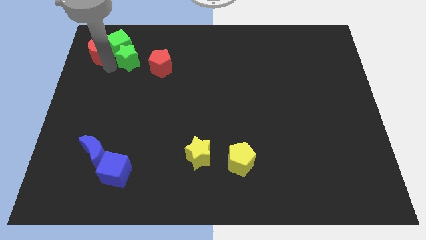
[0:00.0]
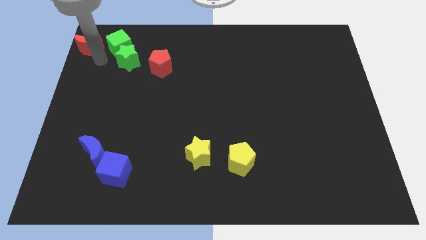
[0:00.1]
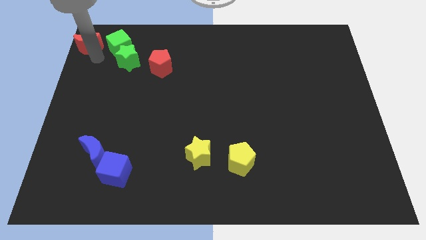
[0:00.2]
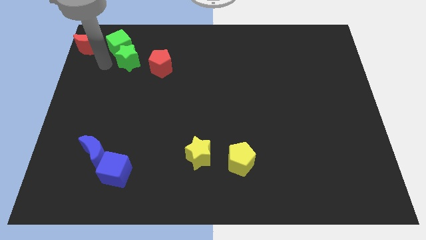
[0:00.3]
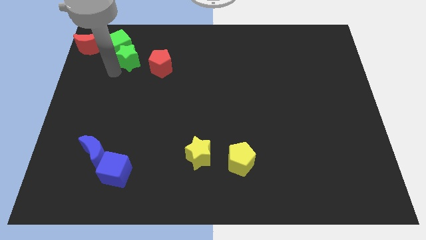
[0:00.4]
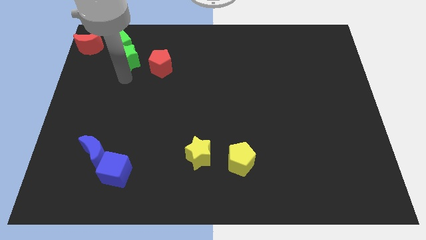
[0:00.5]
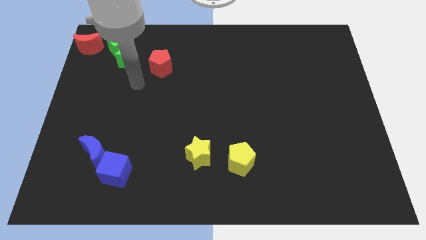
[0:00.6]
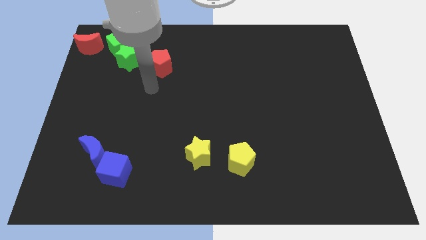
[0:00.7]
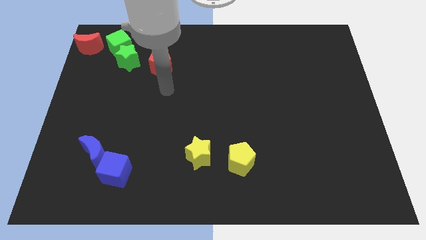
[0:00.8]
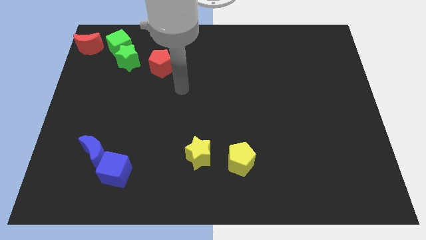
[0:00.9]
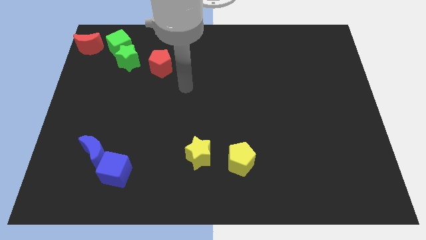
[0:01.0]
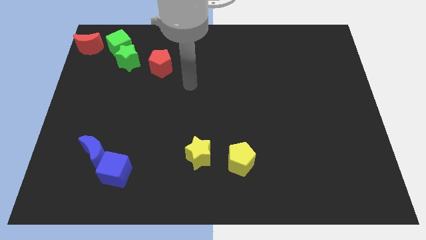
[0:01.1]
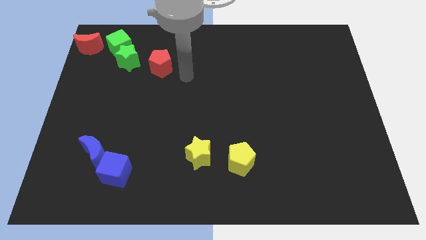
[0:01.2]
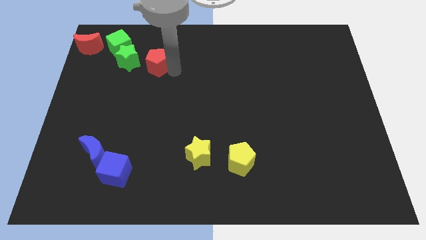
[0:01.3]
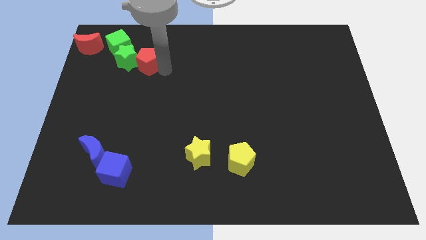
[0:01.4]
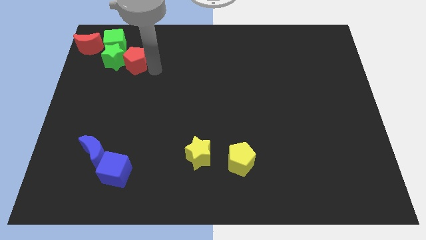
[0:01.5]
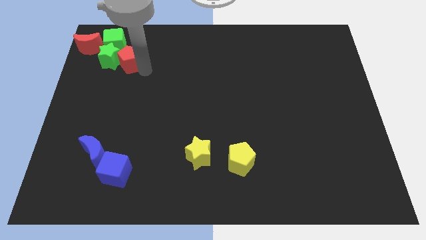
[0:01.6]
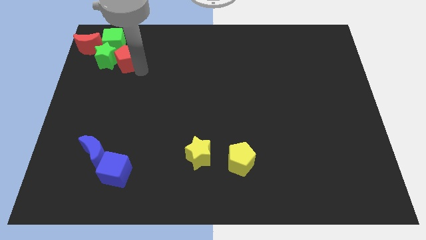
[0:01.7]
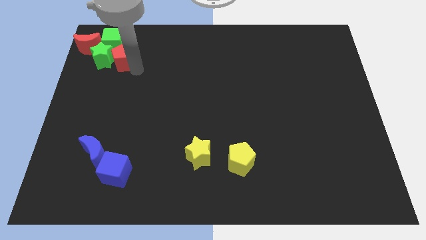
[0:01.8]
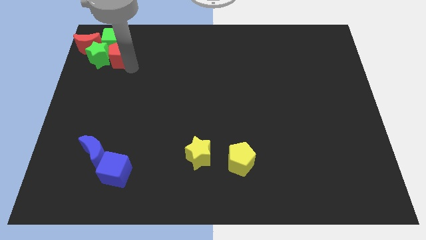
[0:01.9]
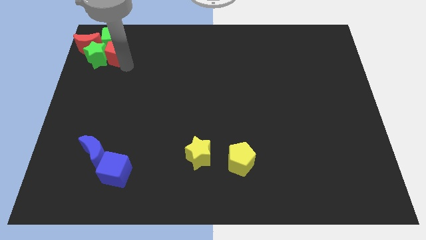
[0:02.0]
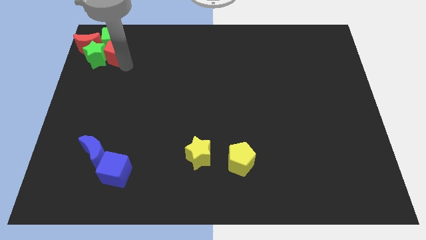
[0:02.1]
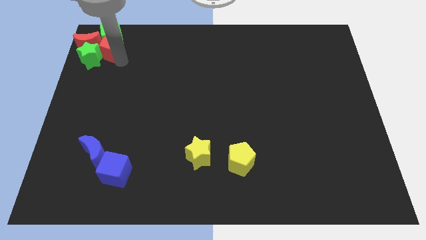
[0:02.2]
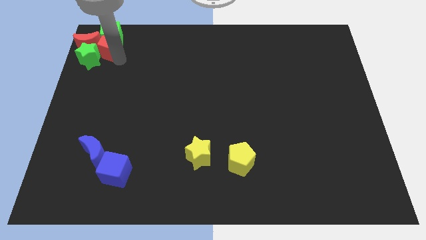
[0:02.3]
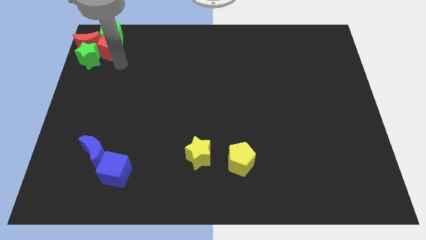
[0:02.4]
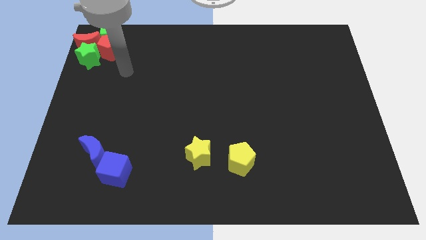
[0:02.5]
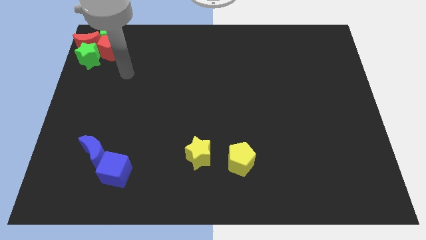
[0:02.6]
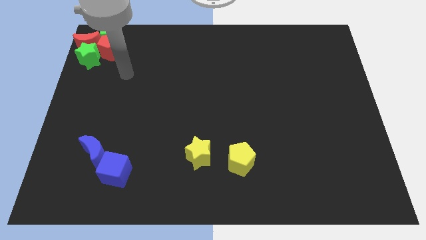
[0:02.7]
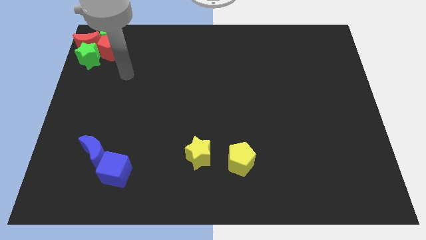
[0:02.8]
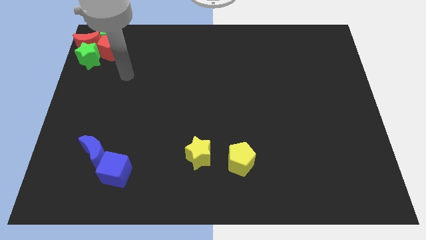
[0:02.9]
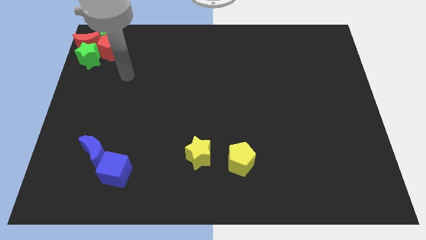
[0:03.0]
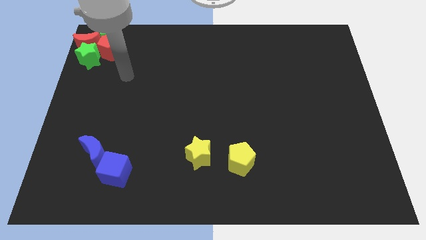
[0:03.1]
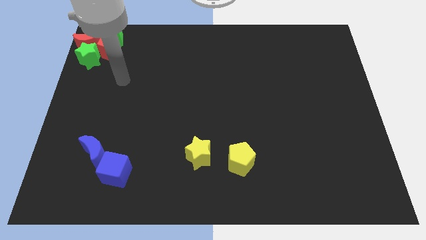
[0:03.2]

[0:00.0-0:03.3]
push the group of red and green blocks together at the top left corner

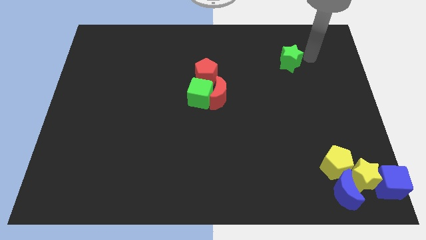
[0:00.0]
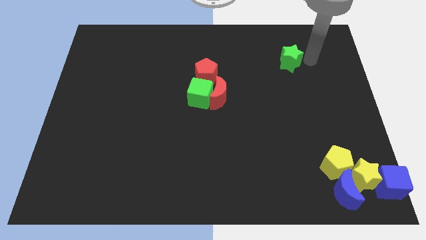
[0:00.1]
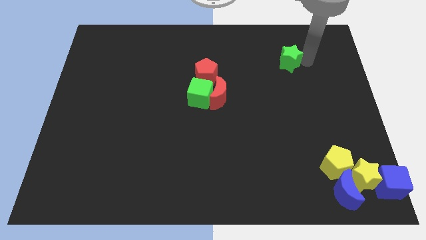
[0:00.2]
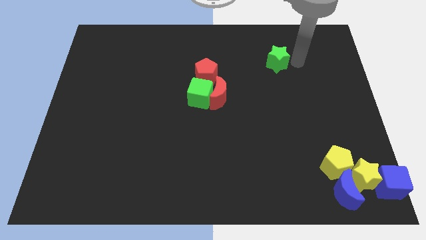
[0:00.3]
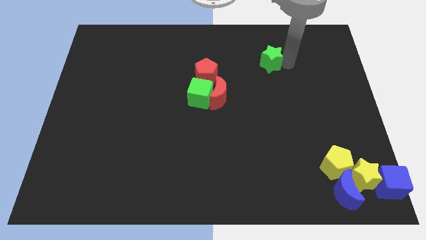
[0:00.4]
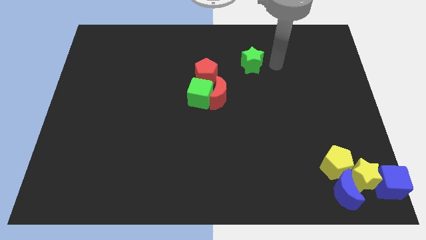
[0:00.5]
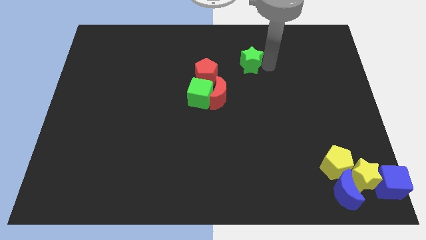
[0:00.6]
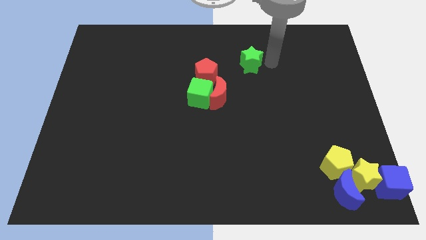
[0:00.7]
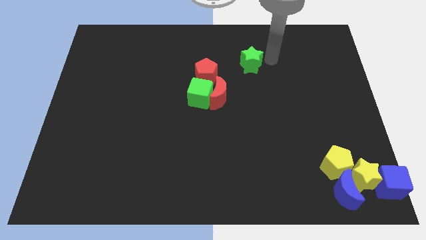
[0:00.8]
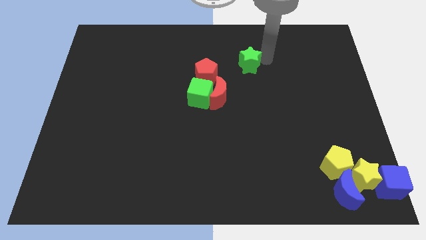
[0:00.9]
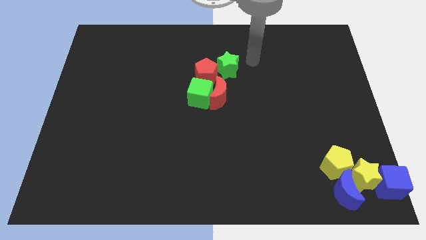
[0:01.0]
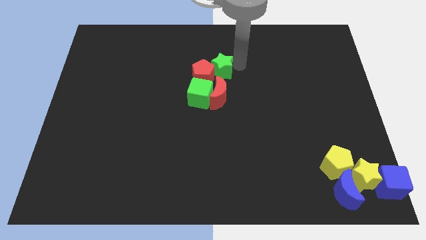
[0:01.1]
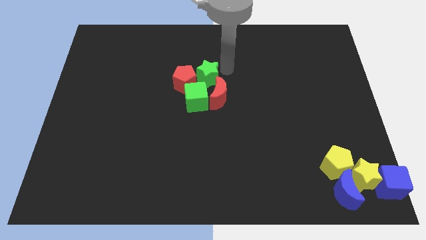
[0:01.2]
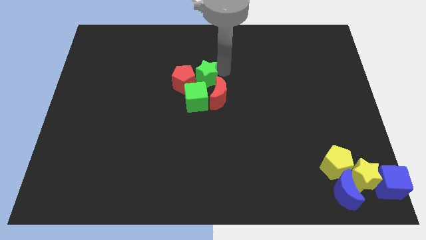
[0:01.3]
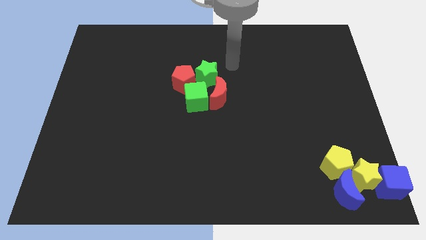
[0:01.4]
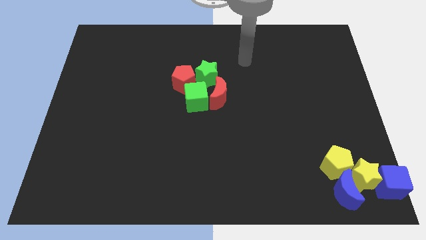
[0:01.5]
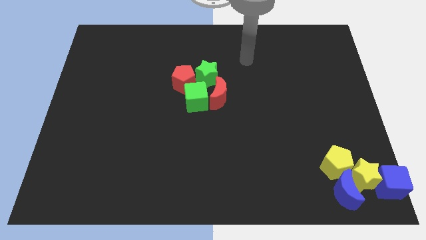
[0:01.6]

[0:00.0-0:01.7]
add green star to the red blocks and green cube

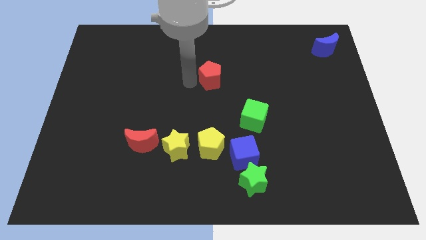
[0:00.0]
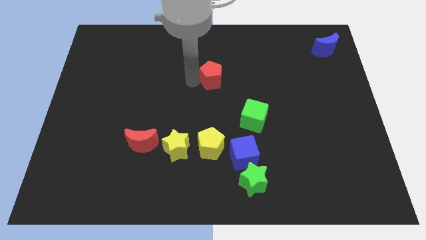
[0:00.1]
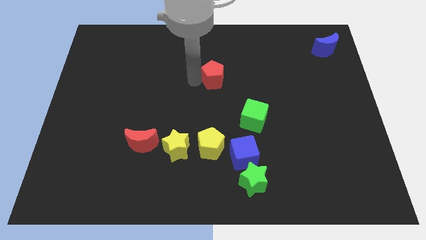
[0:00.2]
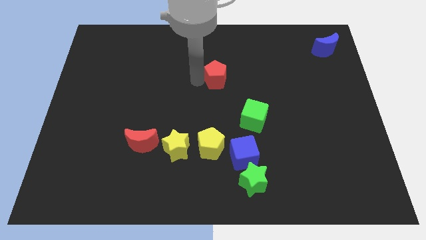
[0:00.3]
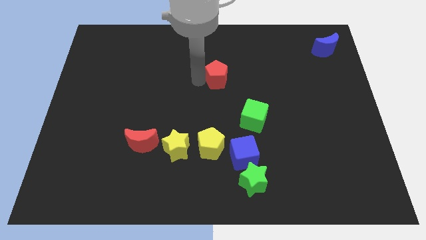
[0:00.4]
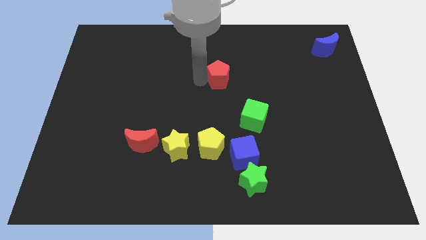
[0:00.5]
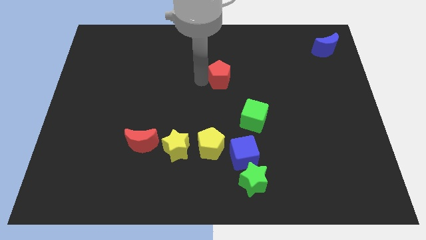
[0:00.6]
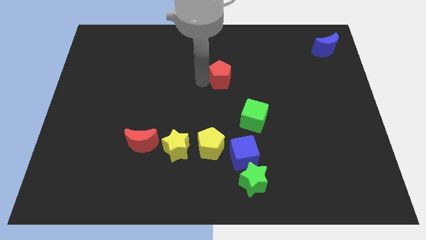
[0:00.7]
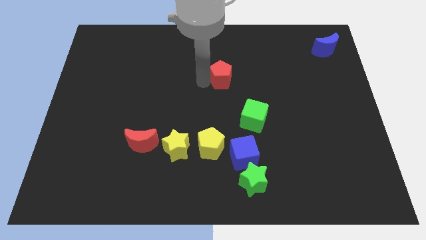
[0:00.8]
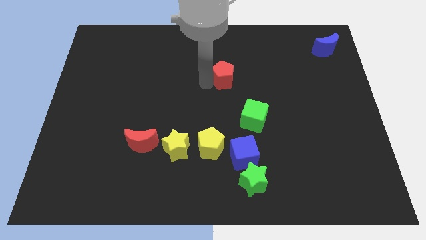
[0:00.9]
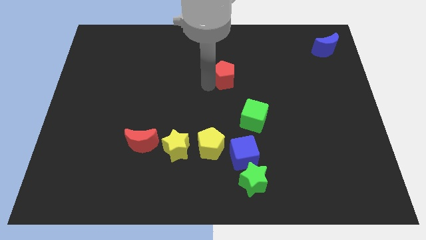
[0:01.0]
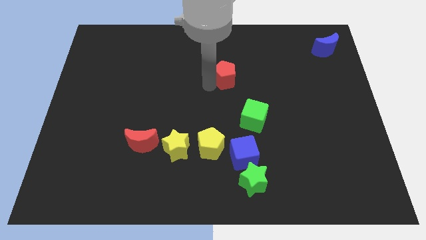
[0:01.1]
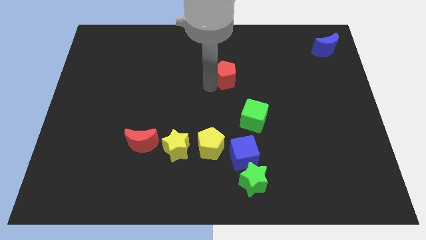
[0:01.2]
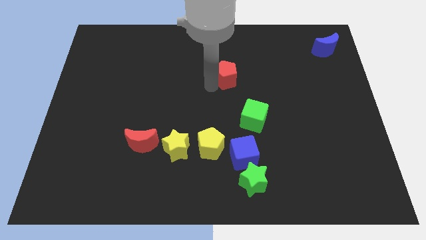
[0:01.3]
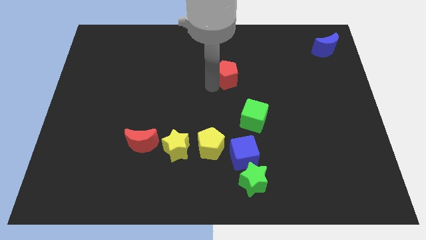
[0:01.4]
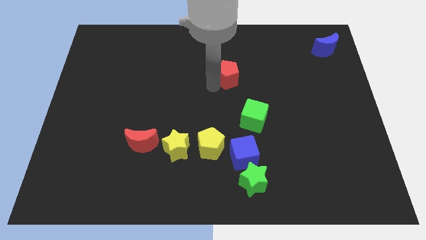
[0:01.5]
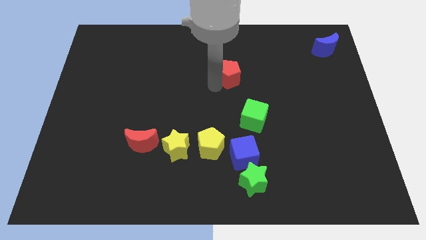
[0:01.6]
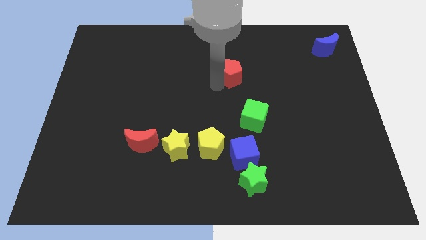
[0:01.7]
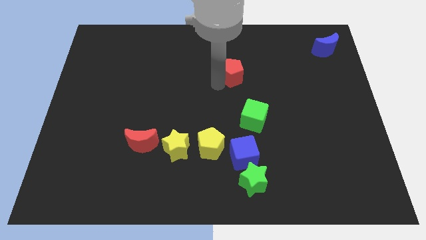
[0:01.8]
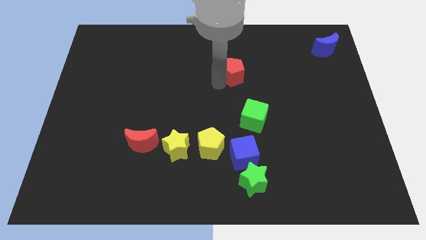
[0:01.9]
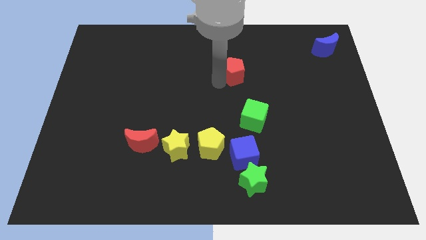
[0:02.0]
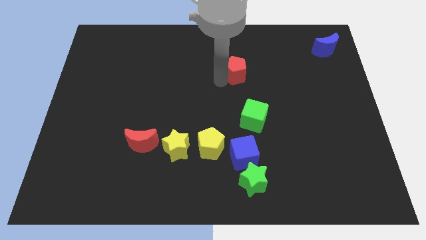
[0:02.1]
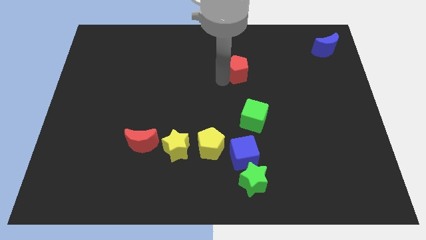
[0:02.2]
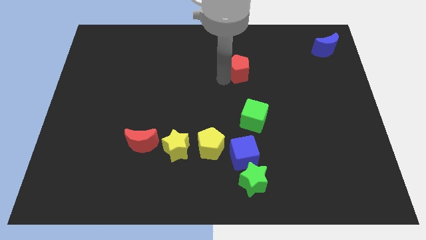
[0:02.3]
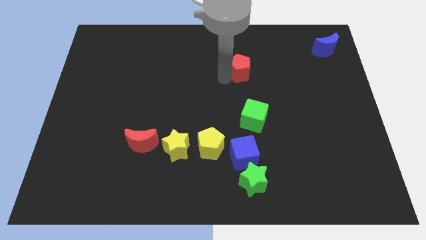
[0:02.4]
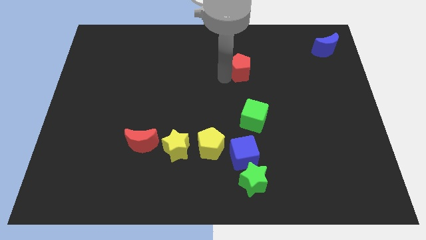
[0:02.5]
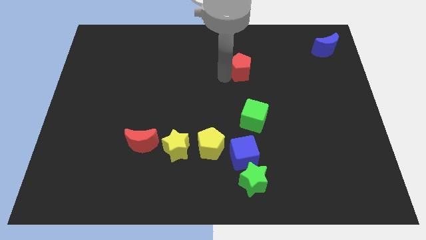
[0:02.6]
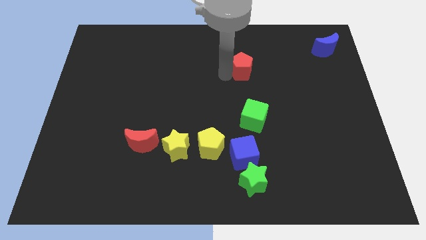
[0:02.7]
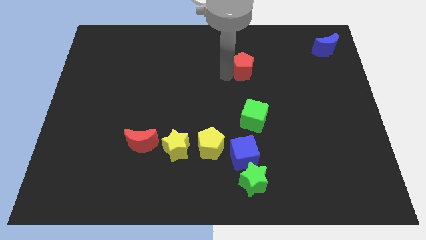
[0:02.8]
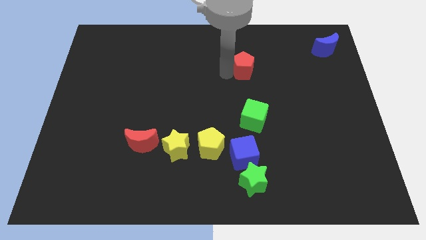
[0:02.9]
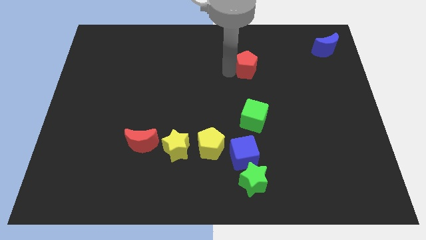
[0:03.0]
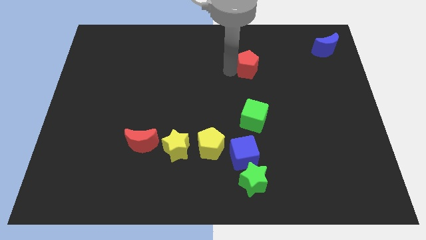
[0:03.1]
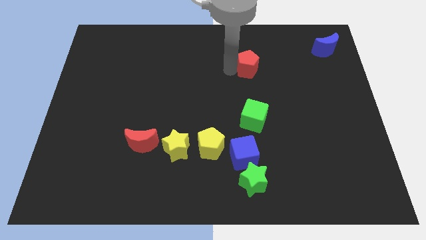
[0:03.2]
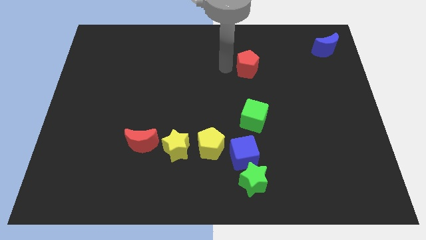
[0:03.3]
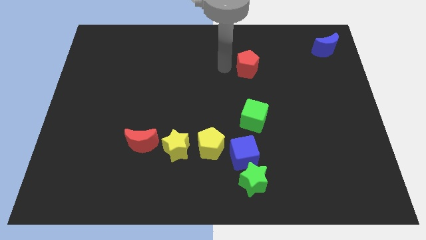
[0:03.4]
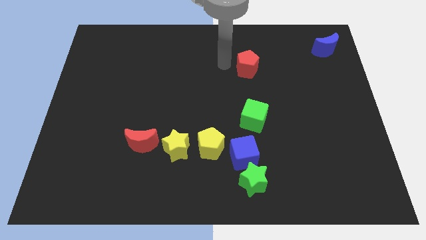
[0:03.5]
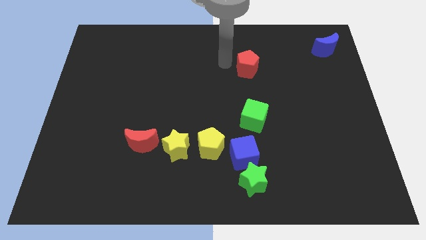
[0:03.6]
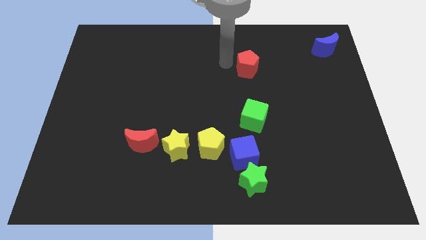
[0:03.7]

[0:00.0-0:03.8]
place the red pentagon above the green cube
